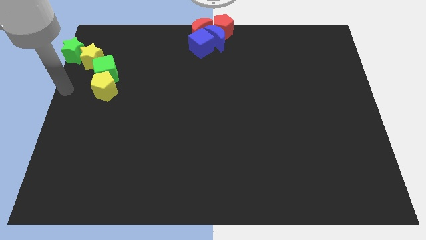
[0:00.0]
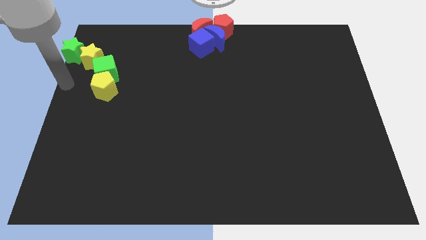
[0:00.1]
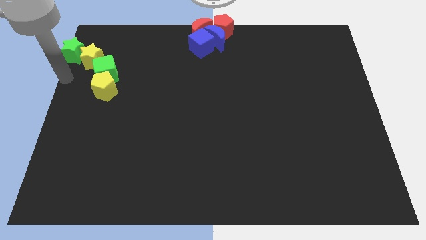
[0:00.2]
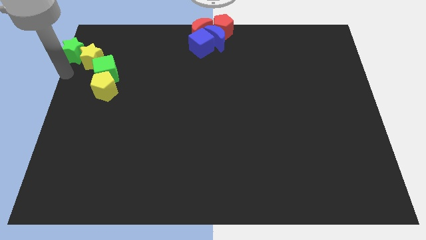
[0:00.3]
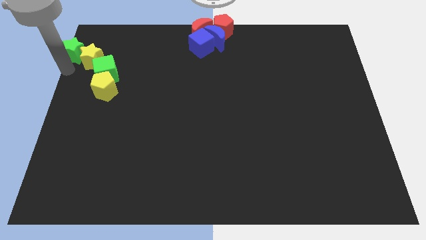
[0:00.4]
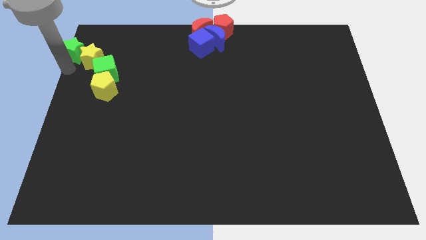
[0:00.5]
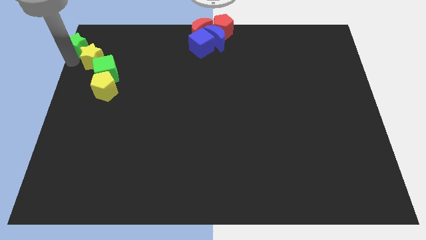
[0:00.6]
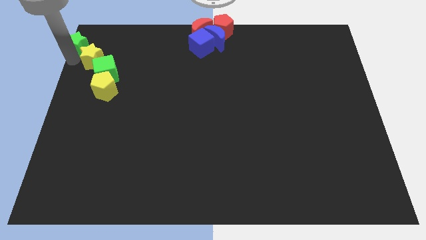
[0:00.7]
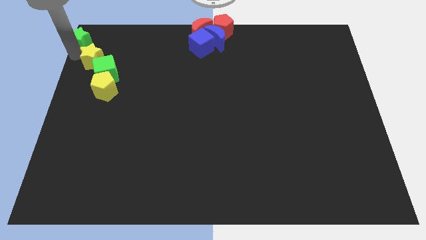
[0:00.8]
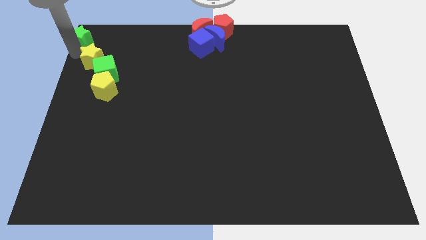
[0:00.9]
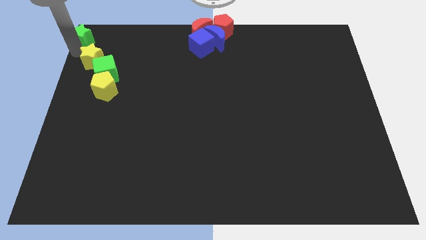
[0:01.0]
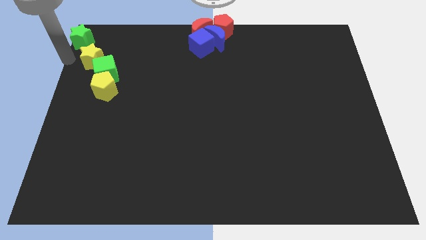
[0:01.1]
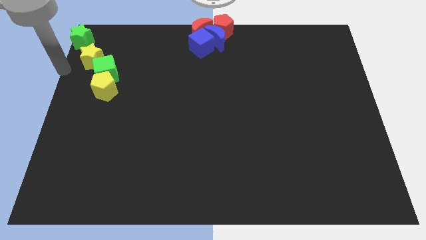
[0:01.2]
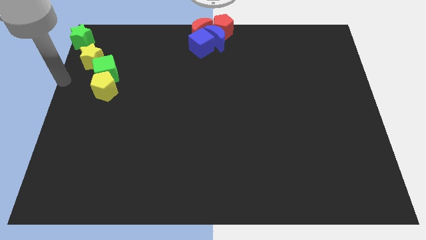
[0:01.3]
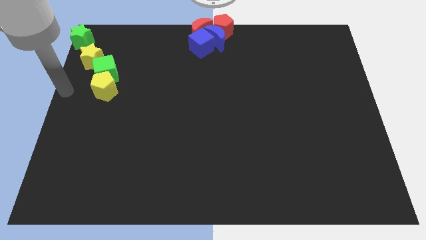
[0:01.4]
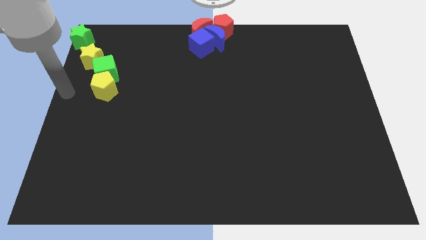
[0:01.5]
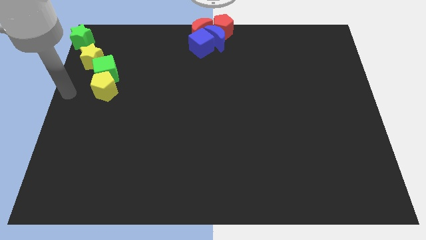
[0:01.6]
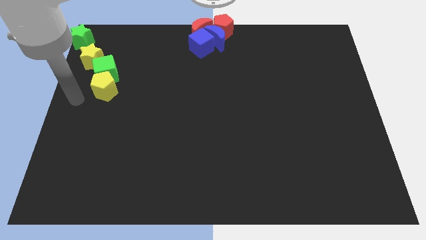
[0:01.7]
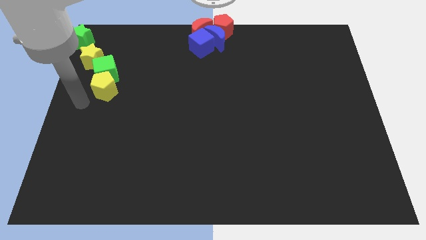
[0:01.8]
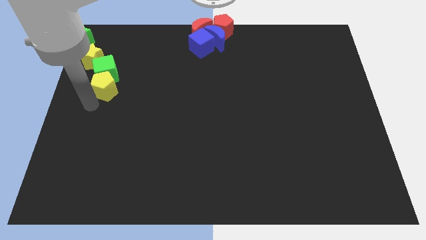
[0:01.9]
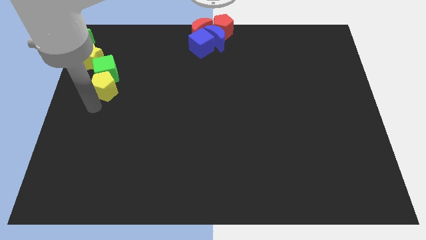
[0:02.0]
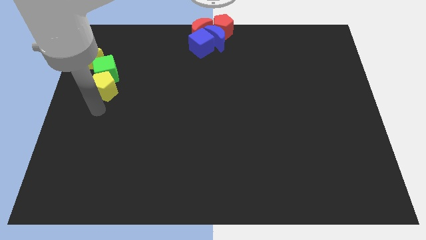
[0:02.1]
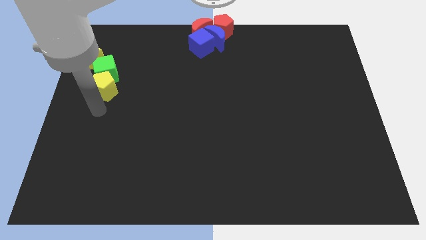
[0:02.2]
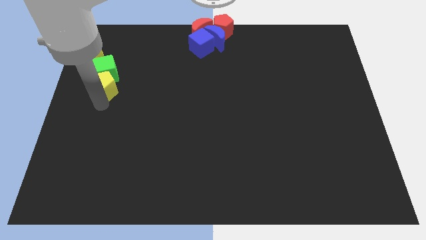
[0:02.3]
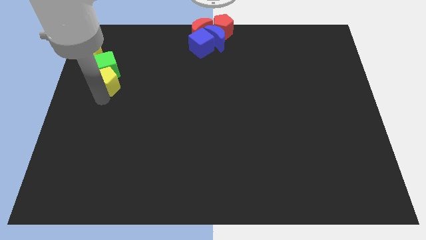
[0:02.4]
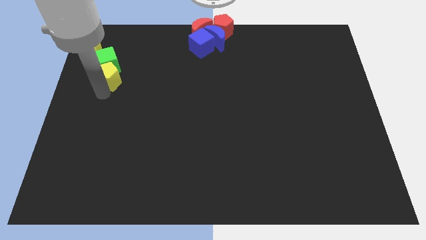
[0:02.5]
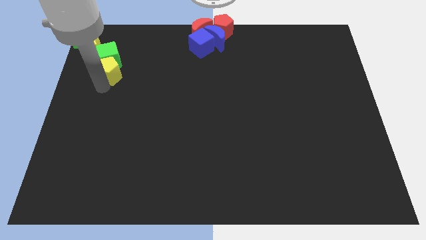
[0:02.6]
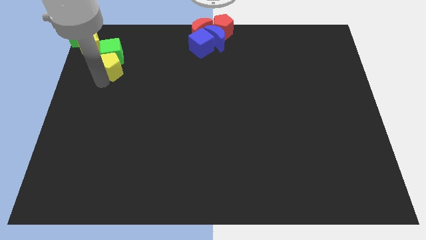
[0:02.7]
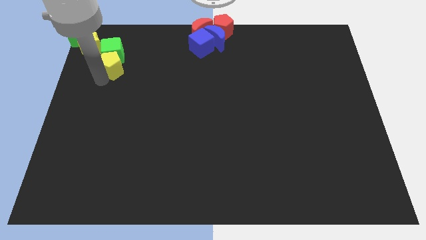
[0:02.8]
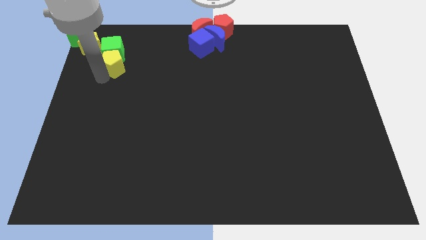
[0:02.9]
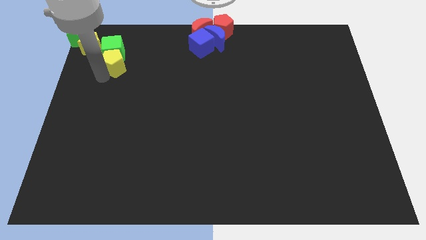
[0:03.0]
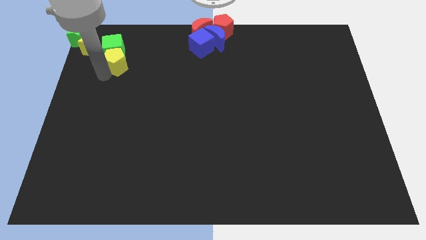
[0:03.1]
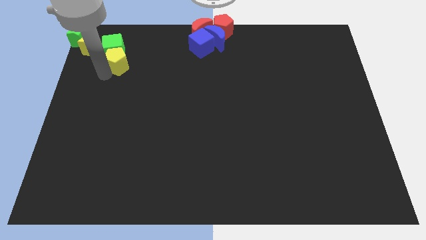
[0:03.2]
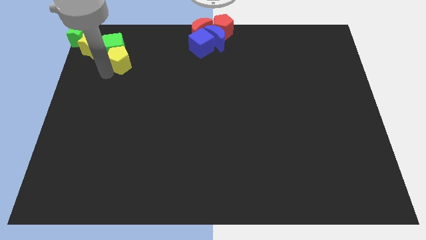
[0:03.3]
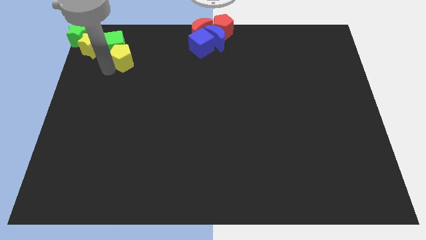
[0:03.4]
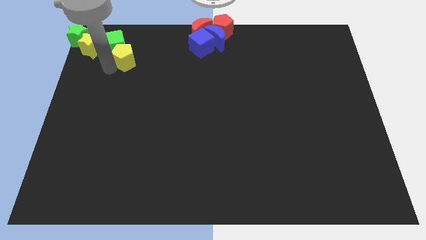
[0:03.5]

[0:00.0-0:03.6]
move yellow pentagon and green cube to the left top

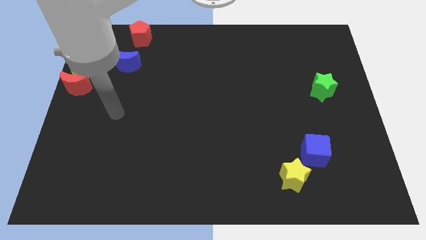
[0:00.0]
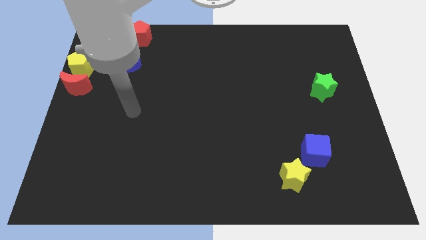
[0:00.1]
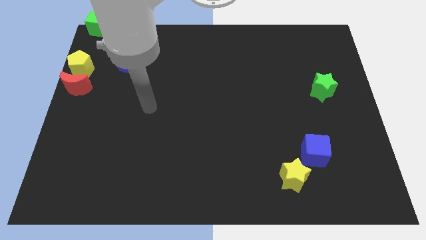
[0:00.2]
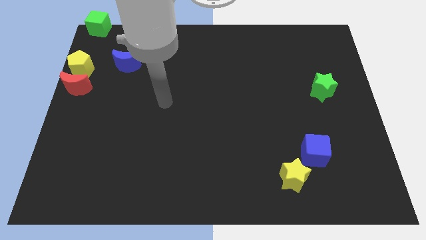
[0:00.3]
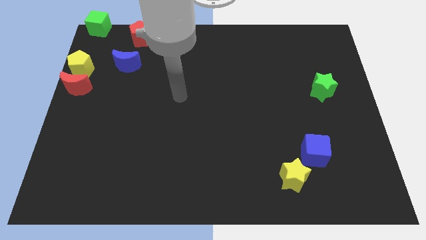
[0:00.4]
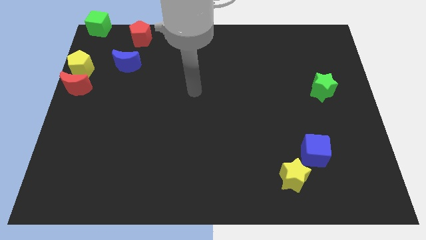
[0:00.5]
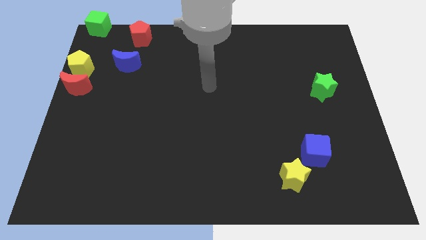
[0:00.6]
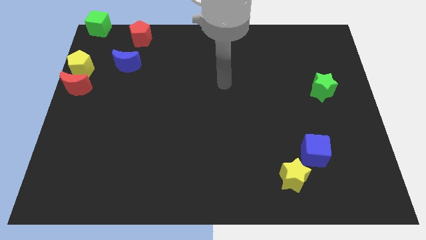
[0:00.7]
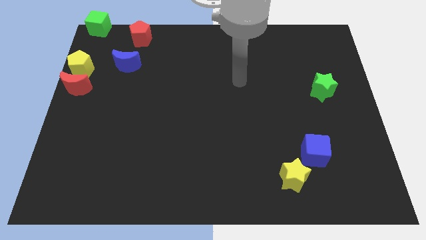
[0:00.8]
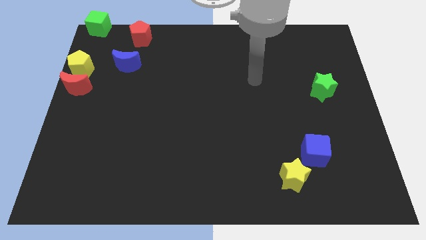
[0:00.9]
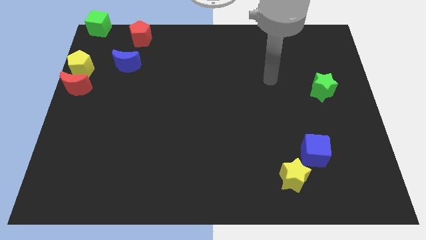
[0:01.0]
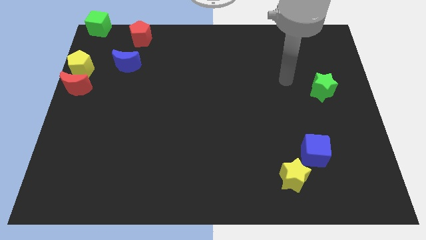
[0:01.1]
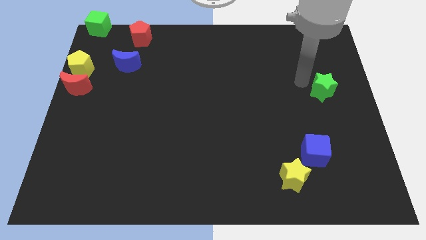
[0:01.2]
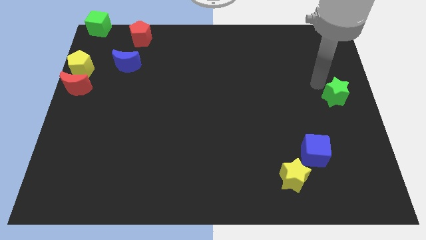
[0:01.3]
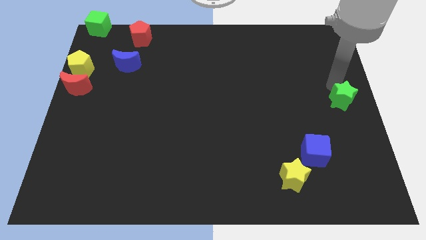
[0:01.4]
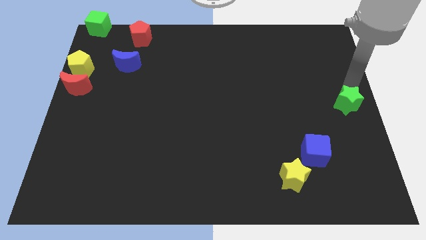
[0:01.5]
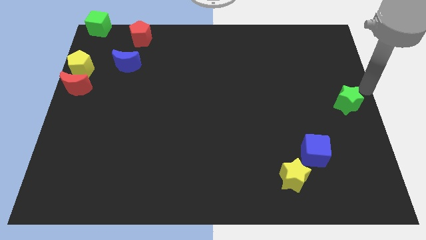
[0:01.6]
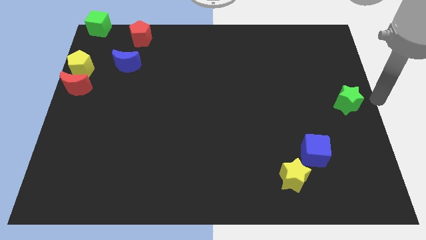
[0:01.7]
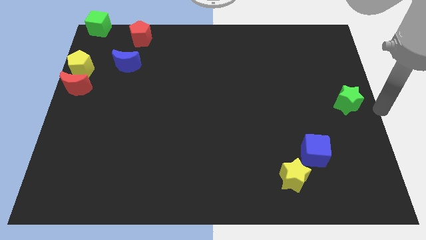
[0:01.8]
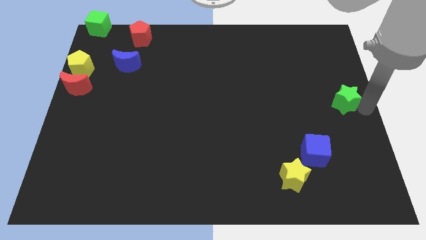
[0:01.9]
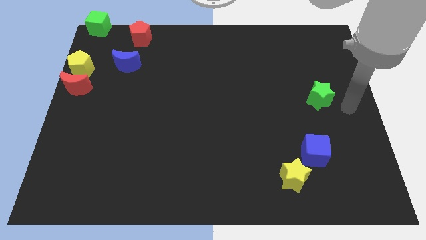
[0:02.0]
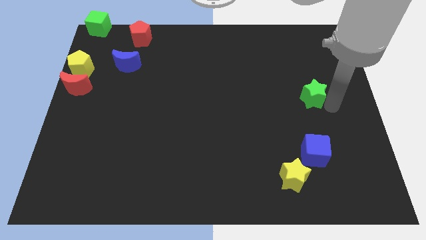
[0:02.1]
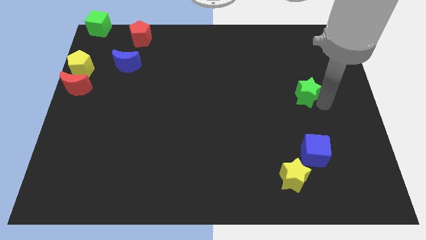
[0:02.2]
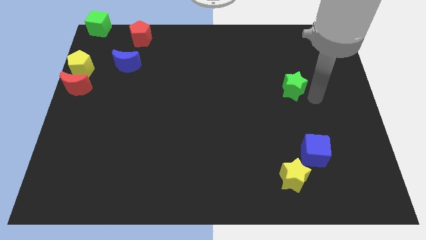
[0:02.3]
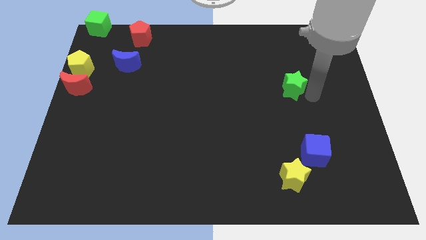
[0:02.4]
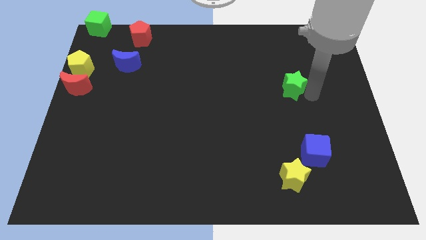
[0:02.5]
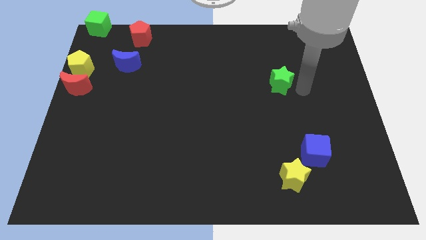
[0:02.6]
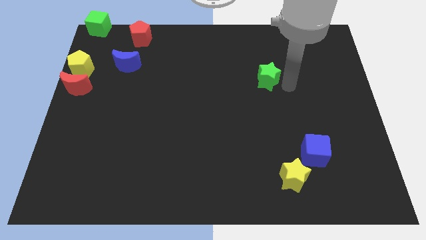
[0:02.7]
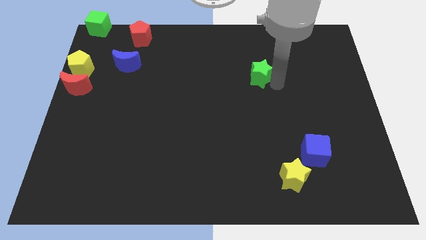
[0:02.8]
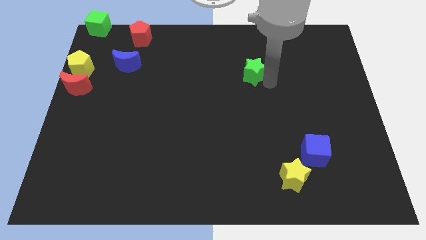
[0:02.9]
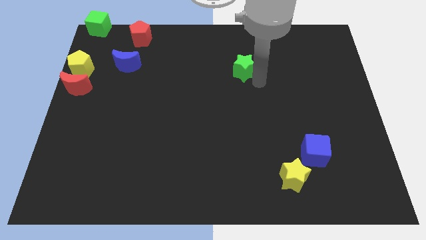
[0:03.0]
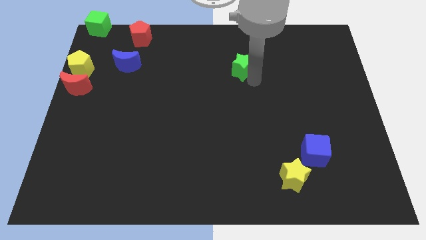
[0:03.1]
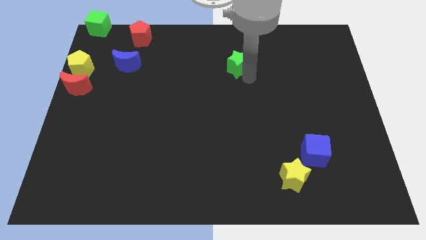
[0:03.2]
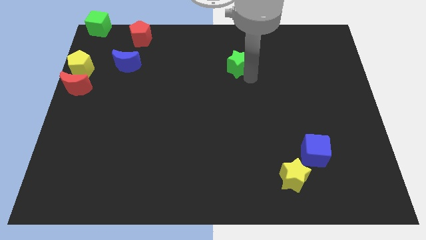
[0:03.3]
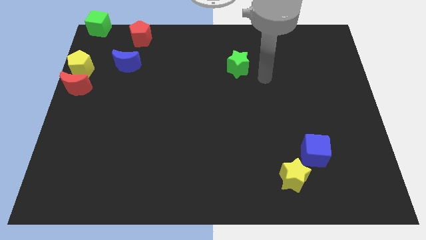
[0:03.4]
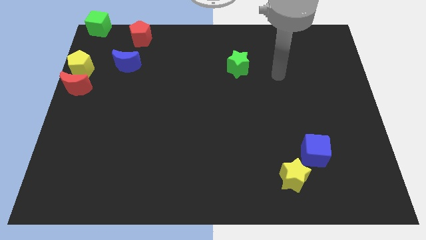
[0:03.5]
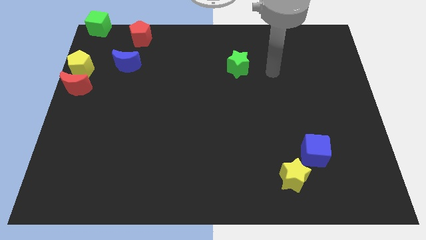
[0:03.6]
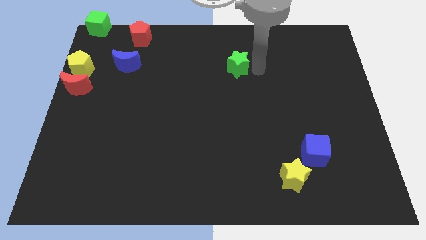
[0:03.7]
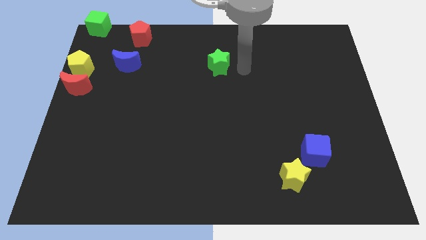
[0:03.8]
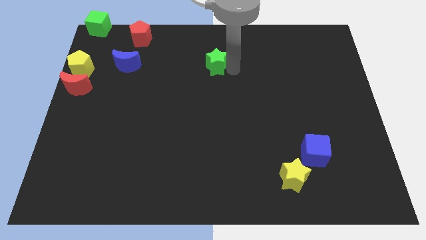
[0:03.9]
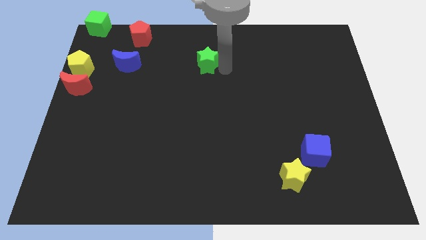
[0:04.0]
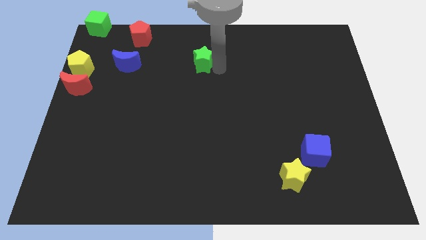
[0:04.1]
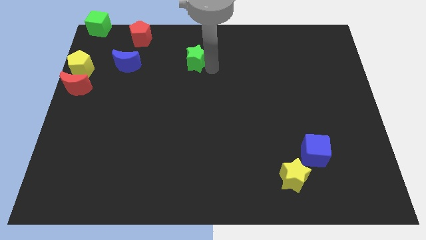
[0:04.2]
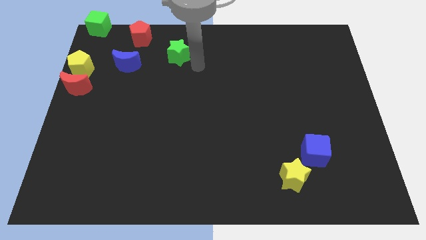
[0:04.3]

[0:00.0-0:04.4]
move the green star parallel to the red pentagon

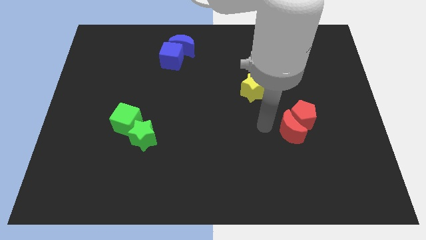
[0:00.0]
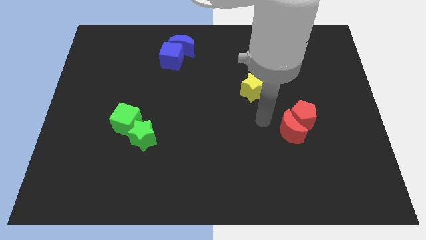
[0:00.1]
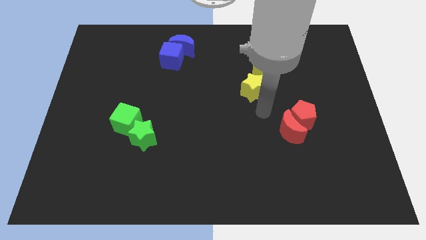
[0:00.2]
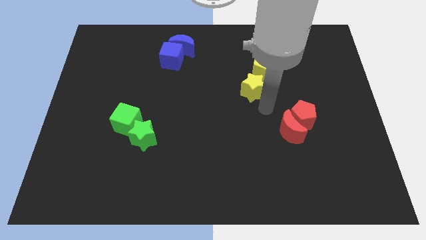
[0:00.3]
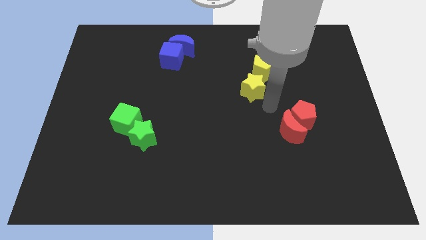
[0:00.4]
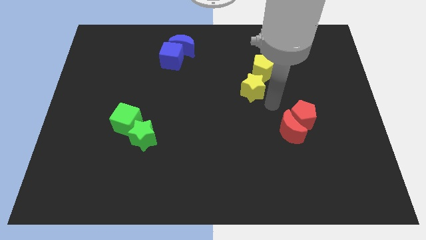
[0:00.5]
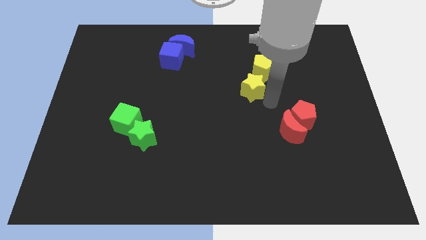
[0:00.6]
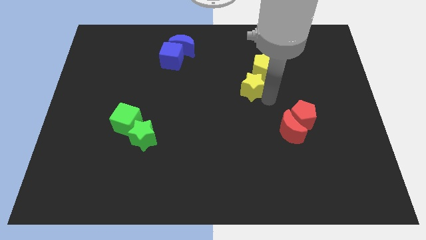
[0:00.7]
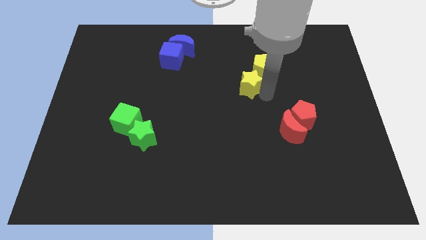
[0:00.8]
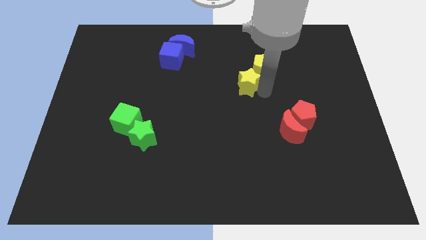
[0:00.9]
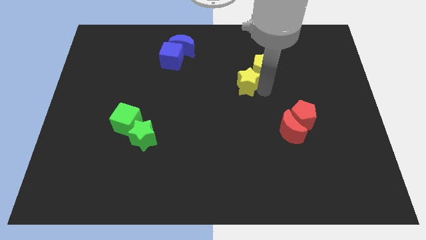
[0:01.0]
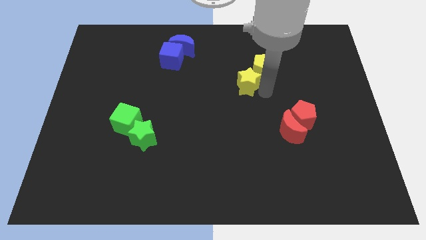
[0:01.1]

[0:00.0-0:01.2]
touch the right side of the yellow star with your arm
